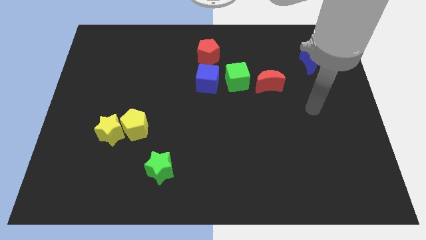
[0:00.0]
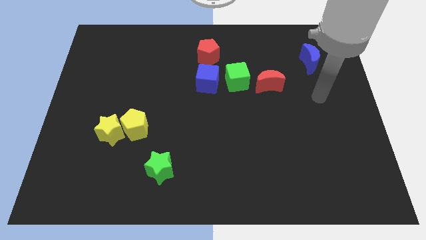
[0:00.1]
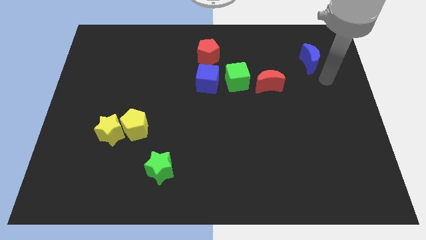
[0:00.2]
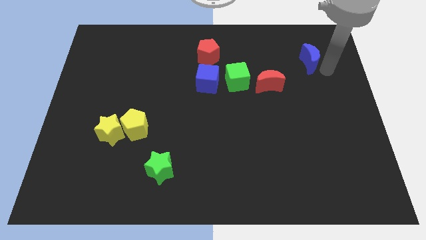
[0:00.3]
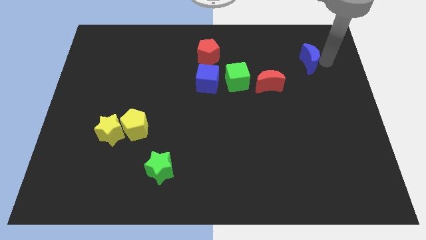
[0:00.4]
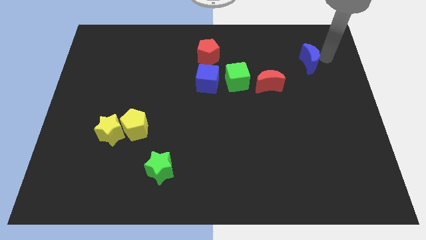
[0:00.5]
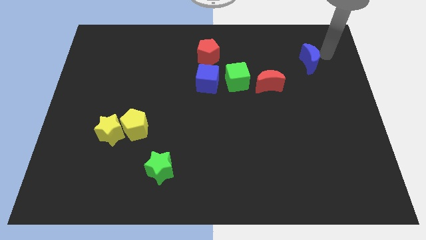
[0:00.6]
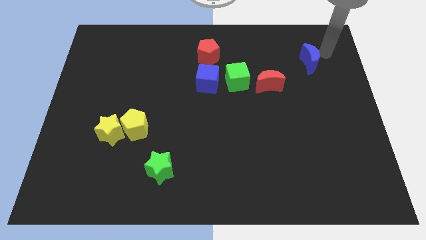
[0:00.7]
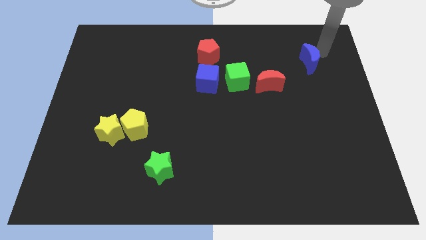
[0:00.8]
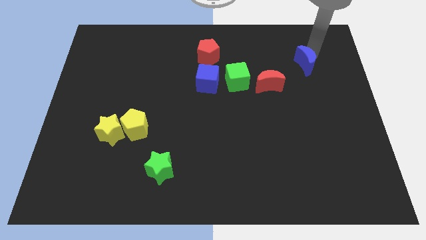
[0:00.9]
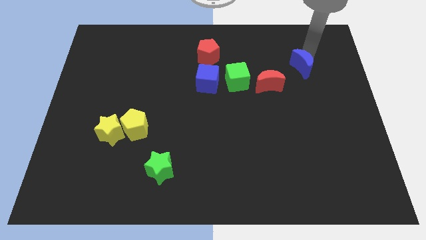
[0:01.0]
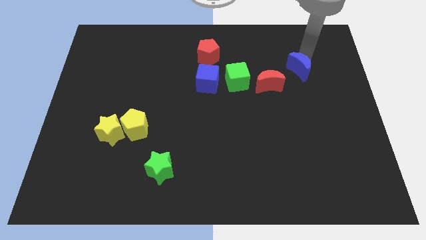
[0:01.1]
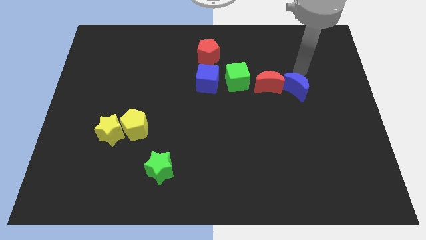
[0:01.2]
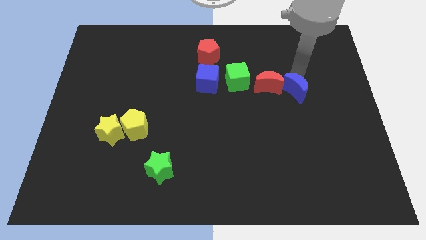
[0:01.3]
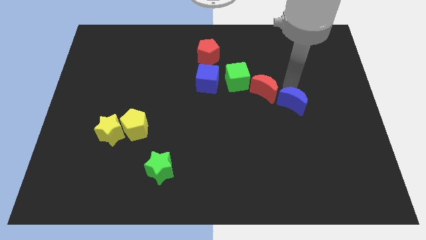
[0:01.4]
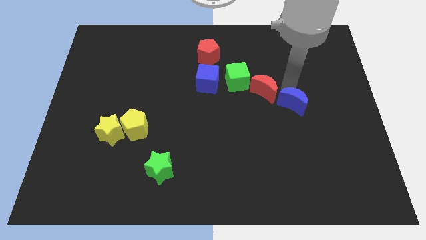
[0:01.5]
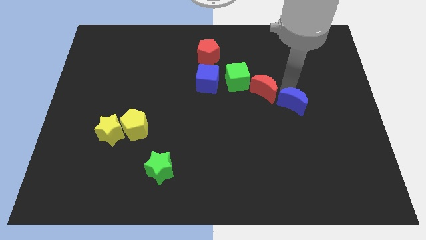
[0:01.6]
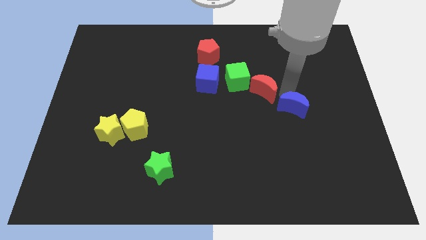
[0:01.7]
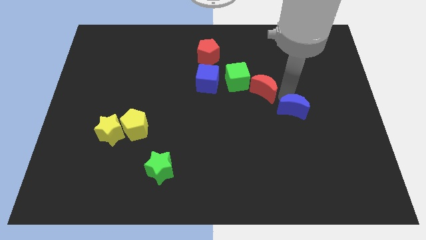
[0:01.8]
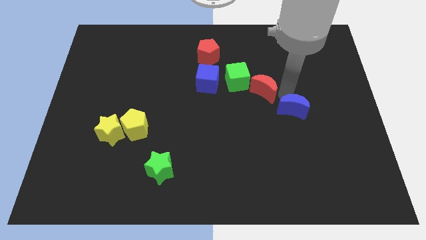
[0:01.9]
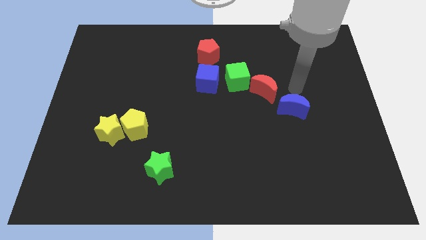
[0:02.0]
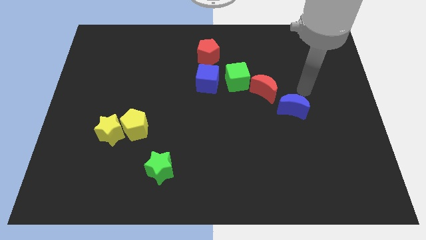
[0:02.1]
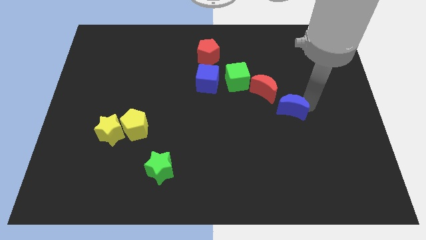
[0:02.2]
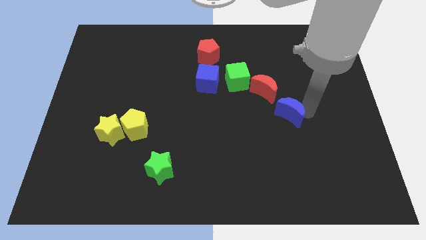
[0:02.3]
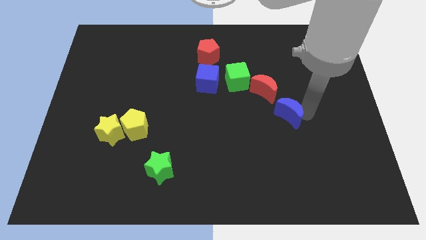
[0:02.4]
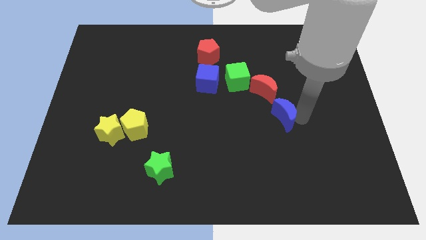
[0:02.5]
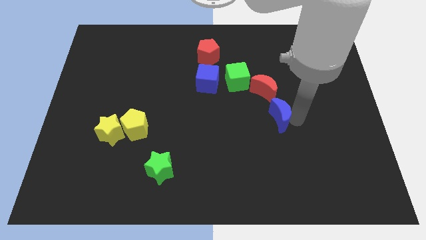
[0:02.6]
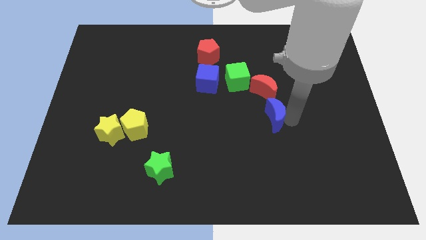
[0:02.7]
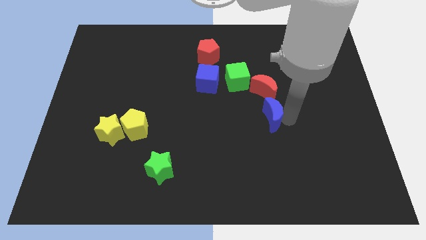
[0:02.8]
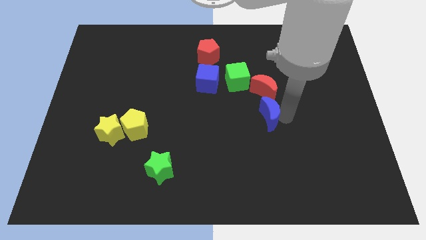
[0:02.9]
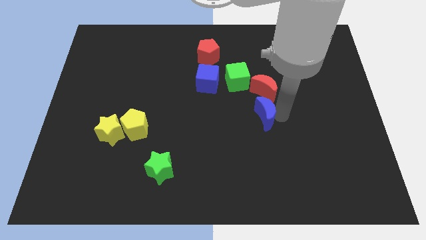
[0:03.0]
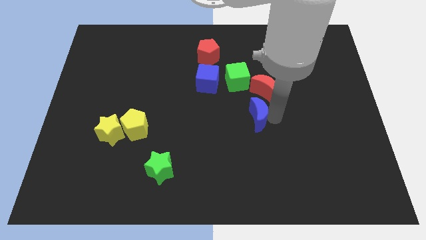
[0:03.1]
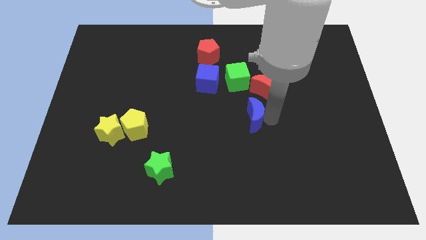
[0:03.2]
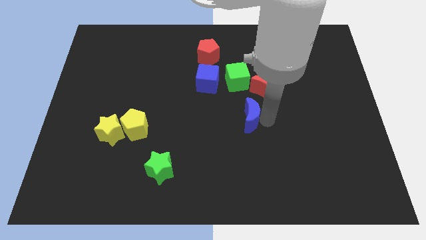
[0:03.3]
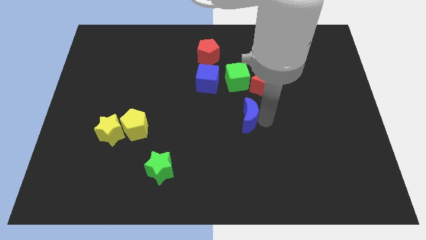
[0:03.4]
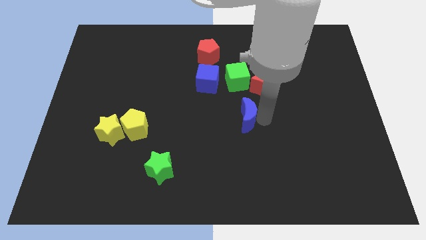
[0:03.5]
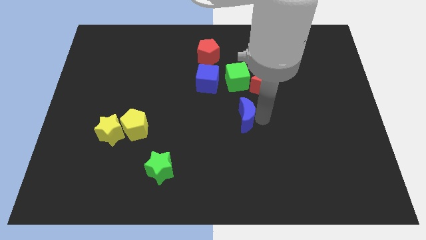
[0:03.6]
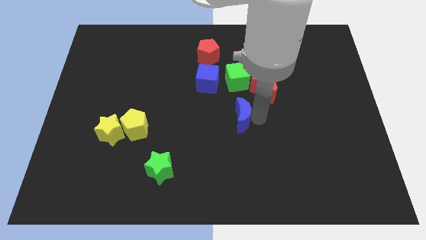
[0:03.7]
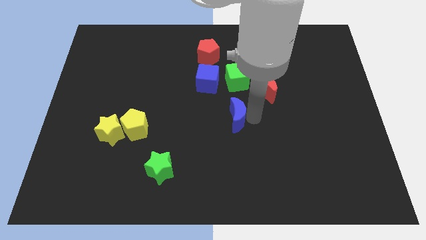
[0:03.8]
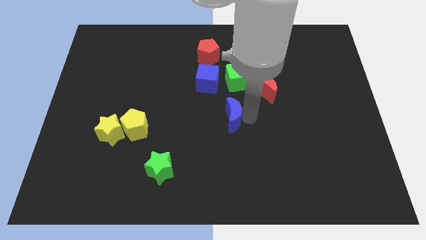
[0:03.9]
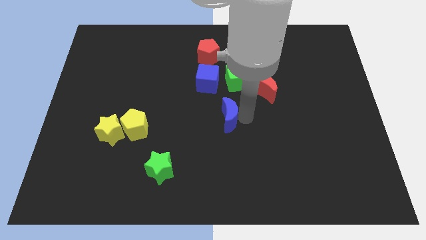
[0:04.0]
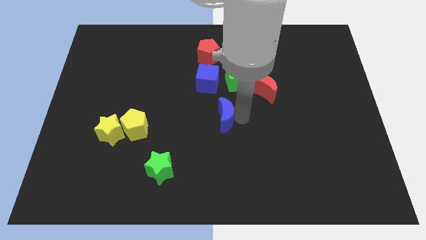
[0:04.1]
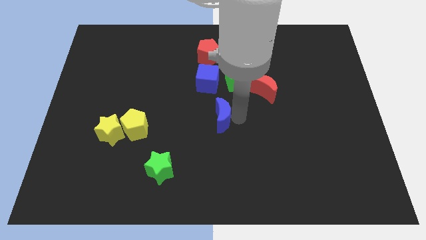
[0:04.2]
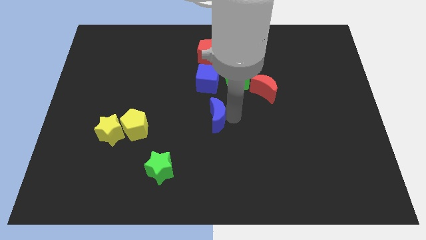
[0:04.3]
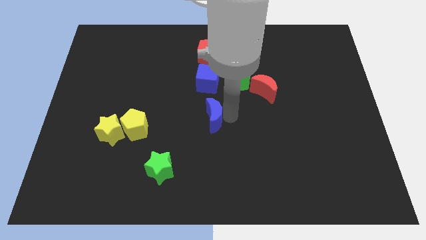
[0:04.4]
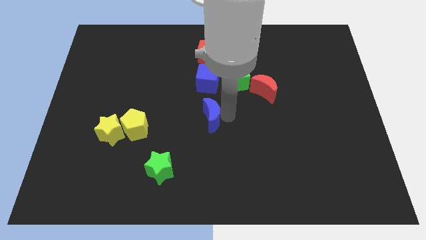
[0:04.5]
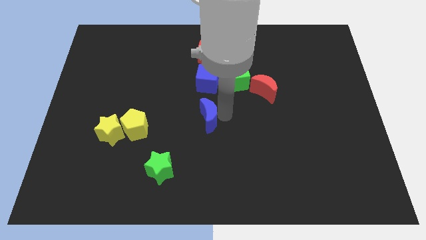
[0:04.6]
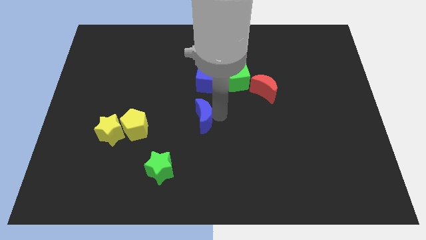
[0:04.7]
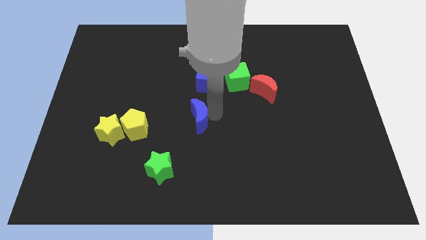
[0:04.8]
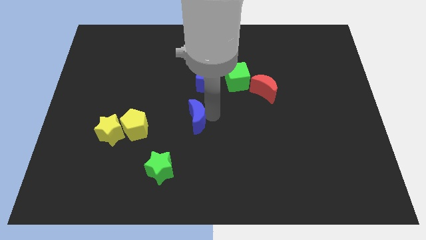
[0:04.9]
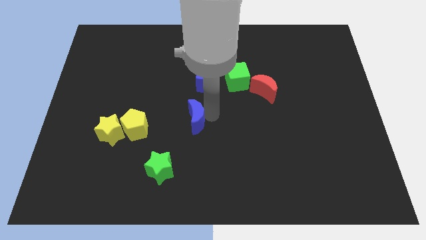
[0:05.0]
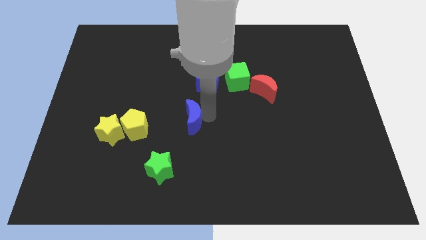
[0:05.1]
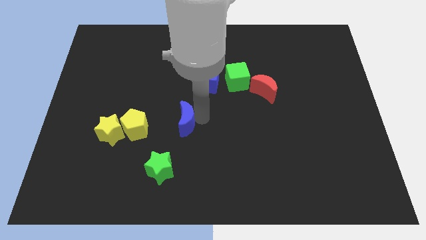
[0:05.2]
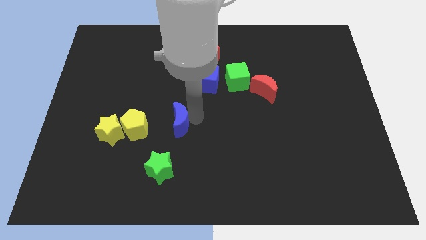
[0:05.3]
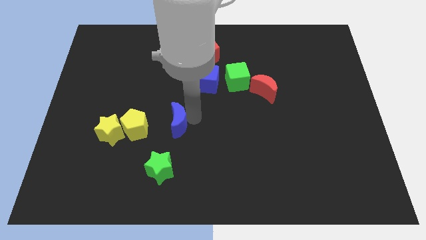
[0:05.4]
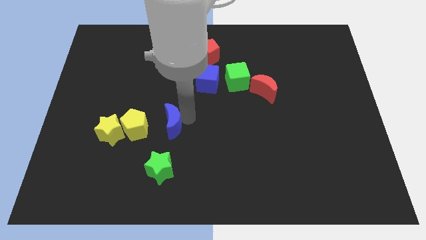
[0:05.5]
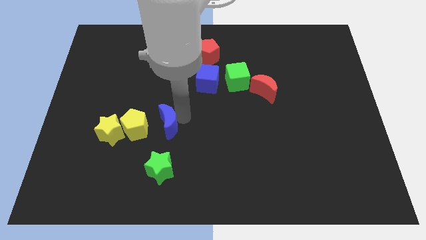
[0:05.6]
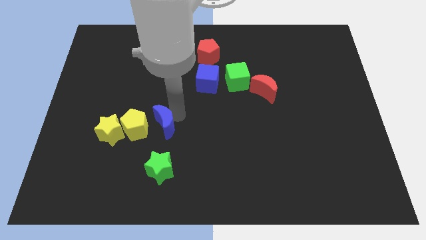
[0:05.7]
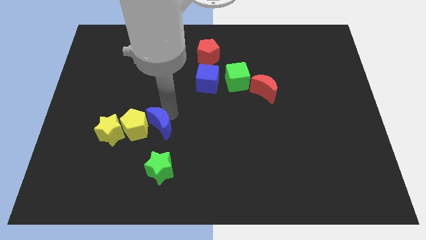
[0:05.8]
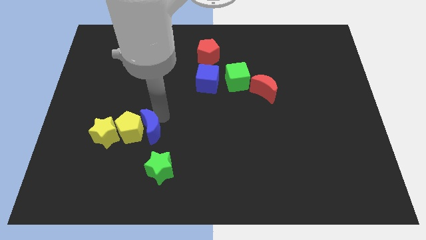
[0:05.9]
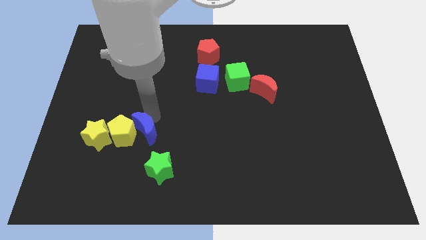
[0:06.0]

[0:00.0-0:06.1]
put the blue moon next to the yellow pentagon

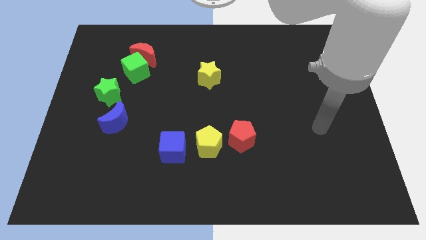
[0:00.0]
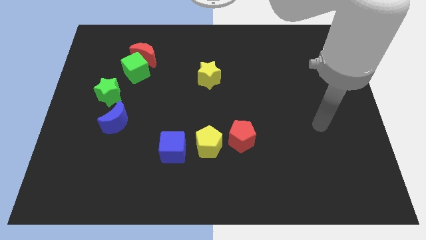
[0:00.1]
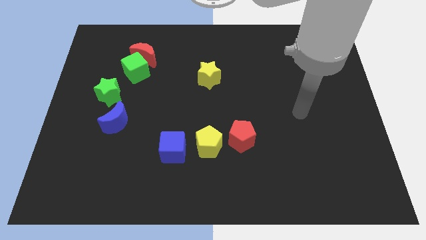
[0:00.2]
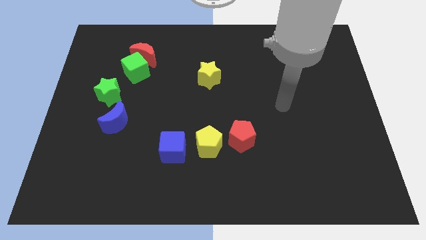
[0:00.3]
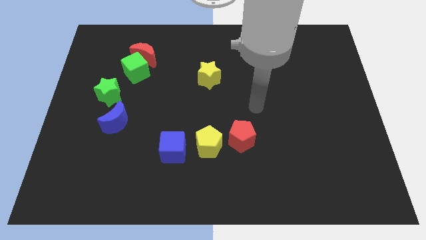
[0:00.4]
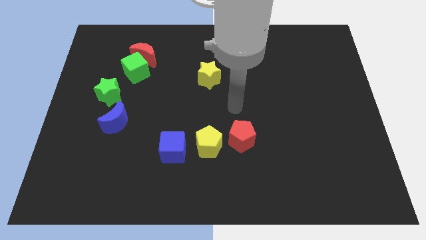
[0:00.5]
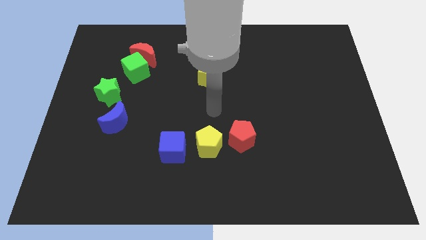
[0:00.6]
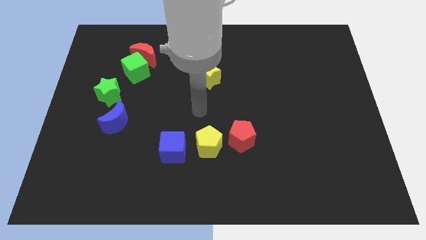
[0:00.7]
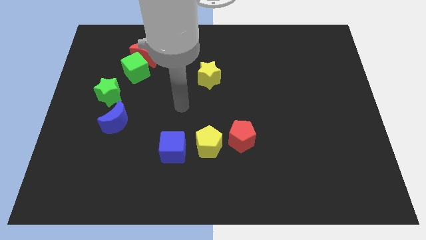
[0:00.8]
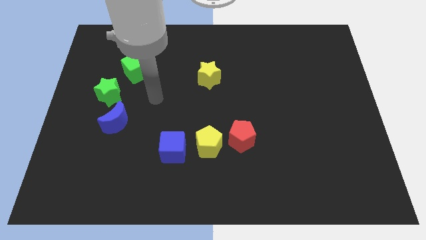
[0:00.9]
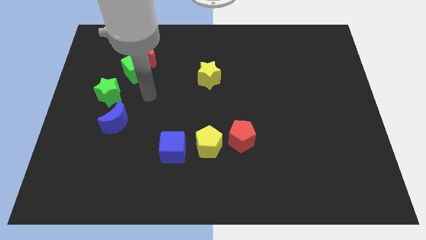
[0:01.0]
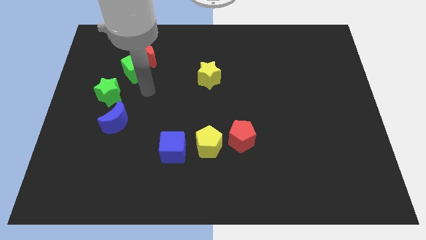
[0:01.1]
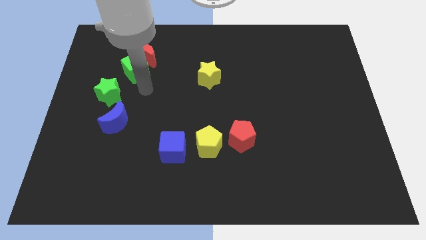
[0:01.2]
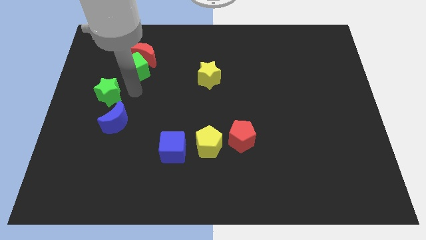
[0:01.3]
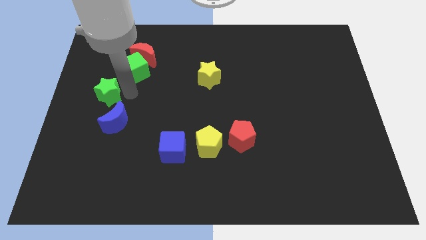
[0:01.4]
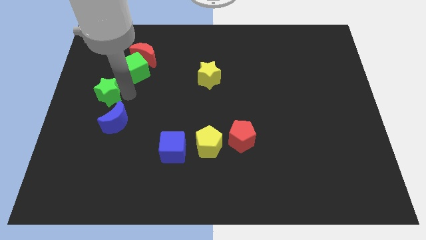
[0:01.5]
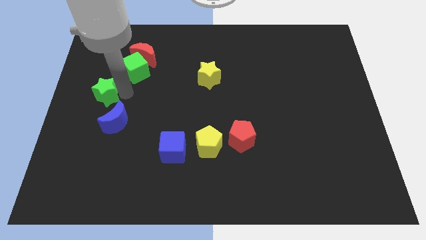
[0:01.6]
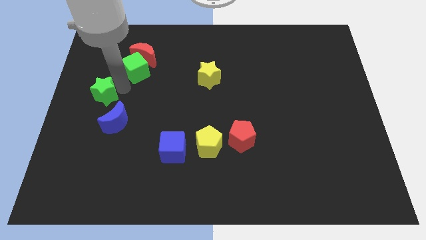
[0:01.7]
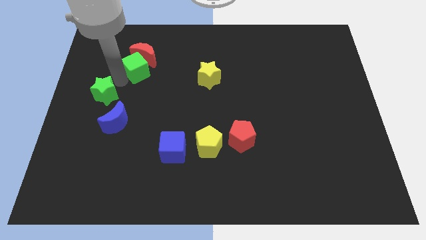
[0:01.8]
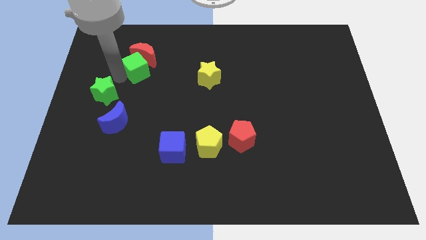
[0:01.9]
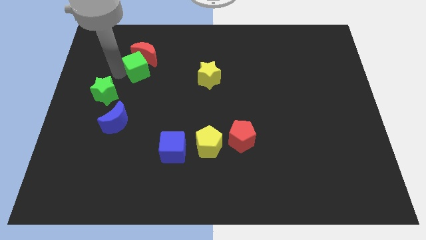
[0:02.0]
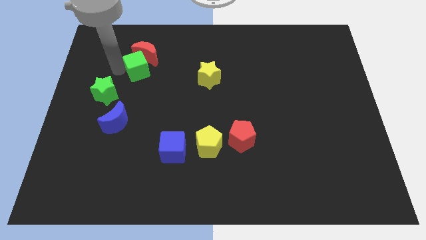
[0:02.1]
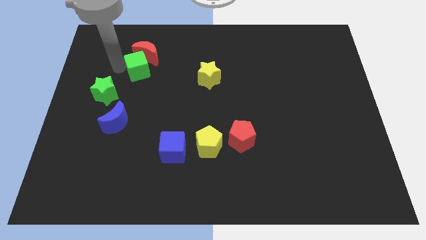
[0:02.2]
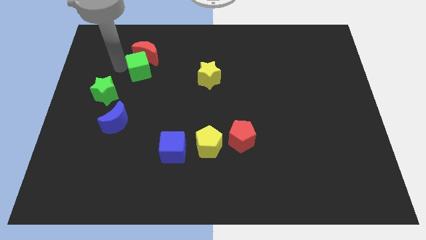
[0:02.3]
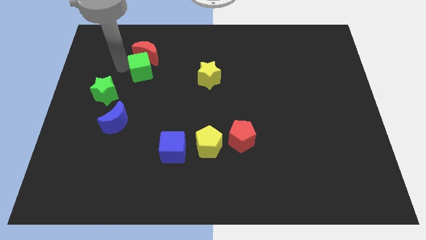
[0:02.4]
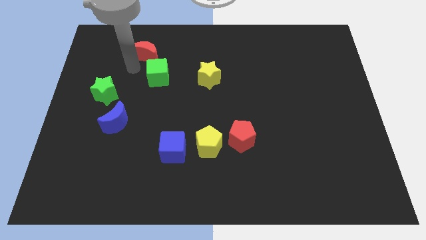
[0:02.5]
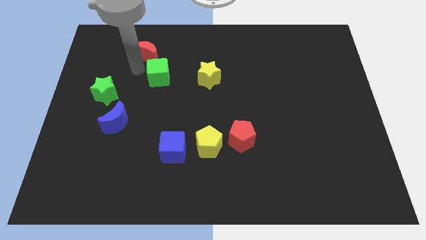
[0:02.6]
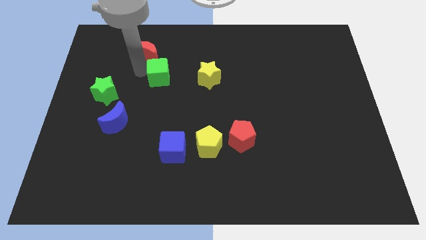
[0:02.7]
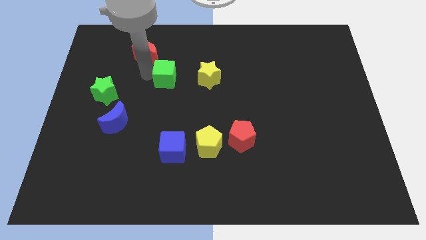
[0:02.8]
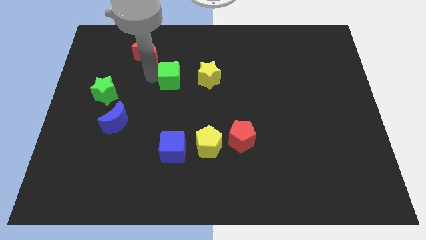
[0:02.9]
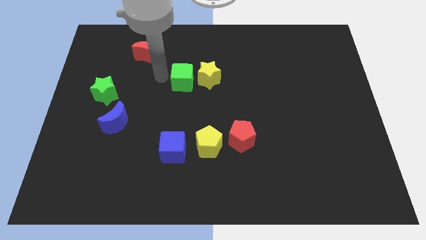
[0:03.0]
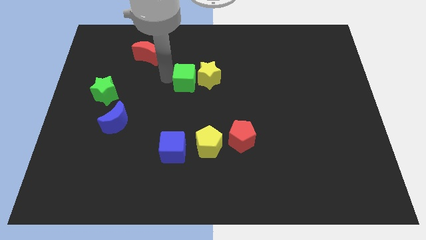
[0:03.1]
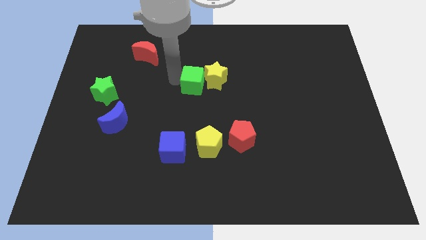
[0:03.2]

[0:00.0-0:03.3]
put the green cube close to the yellow star
